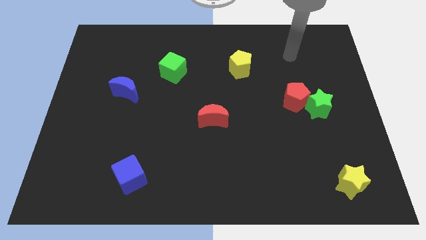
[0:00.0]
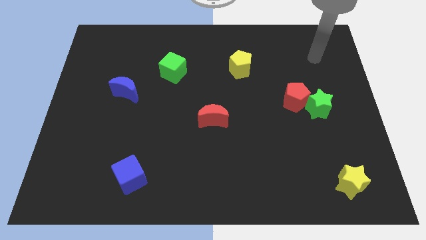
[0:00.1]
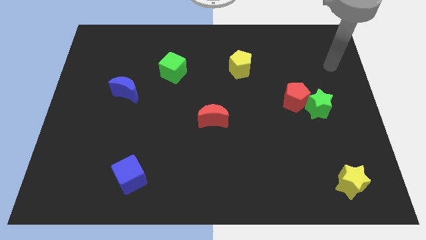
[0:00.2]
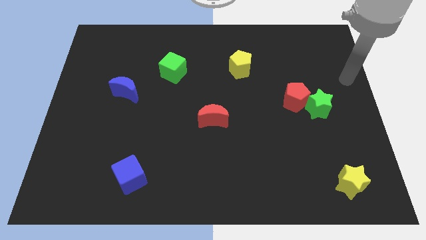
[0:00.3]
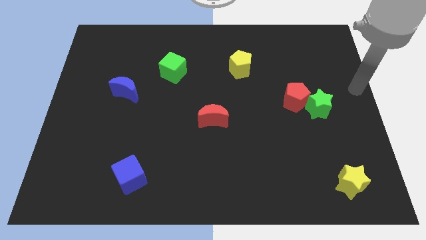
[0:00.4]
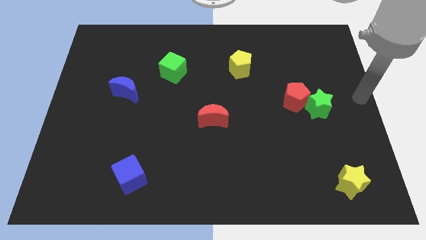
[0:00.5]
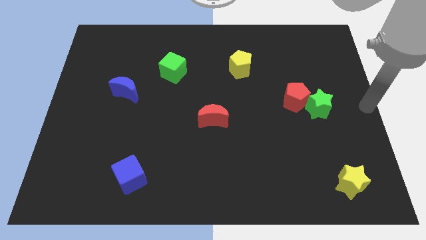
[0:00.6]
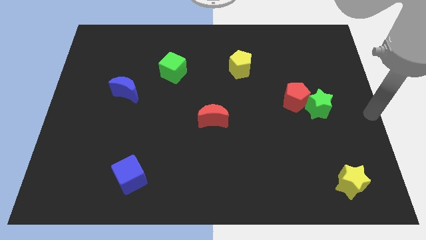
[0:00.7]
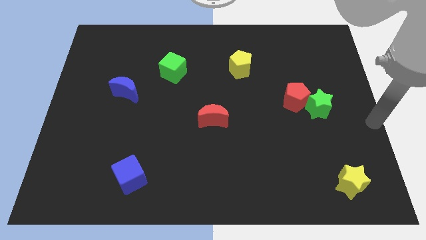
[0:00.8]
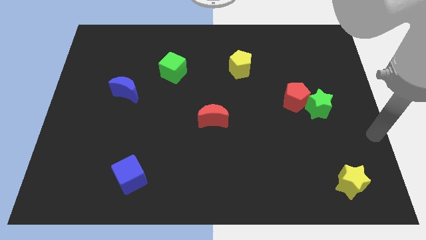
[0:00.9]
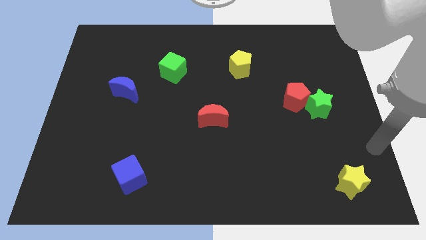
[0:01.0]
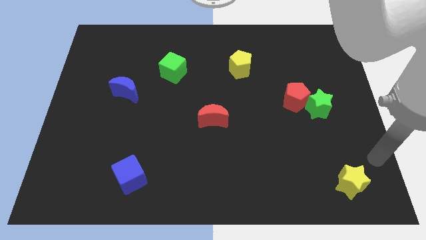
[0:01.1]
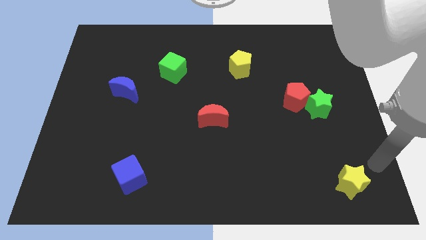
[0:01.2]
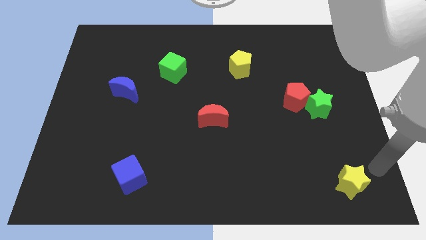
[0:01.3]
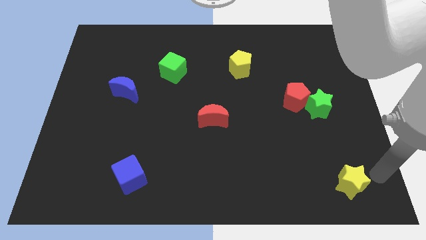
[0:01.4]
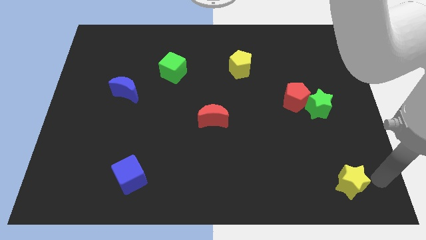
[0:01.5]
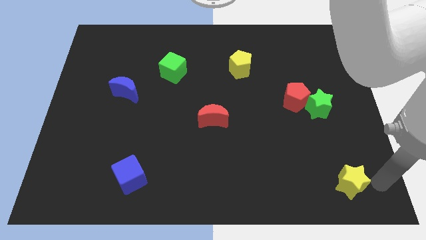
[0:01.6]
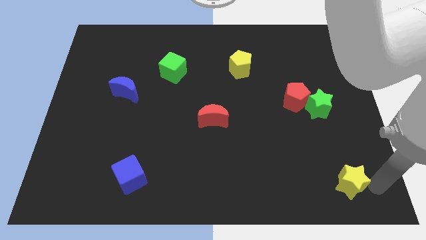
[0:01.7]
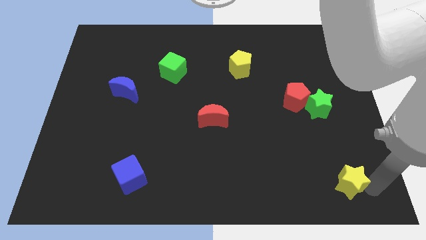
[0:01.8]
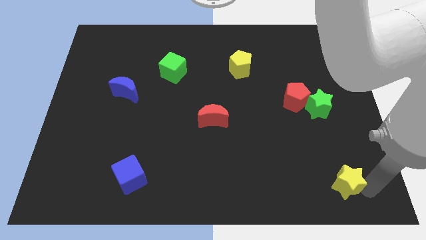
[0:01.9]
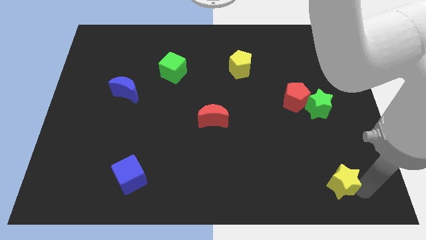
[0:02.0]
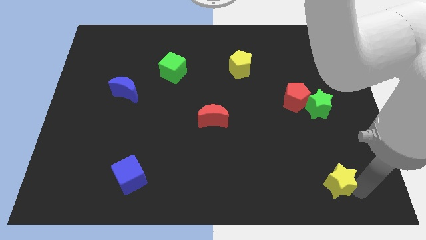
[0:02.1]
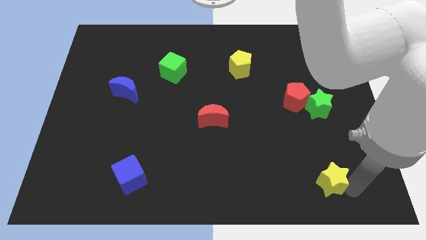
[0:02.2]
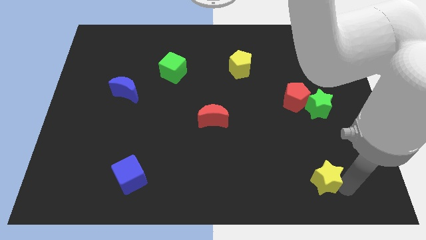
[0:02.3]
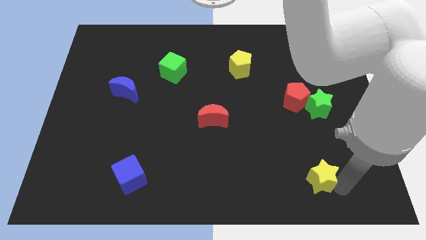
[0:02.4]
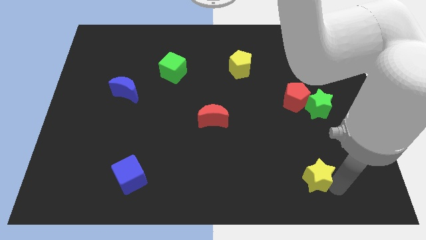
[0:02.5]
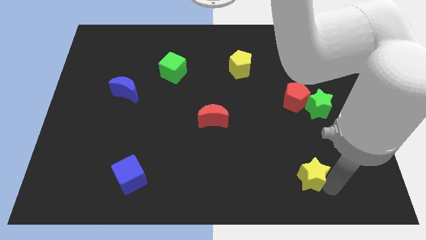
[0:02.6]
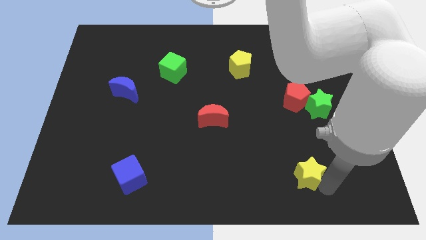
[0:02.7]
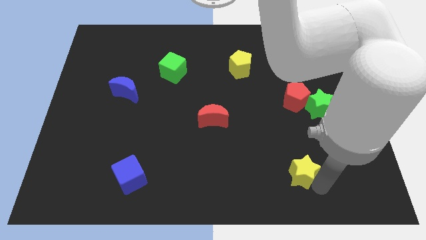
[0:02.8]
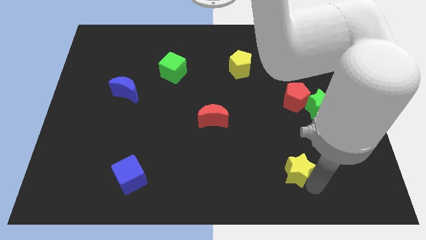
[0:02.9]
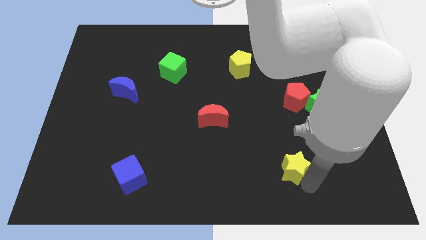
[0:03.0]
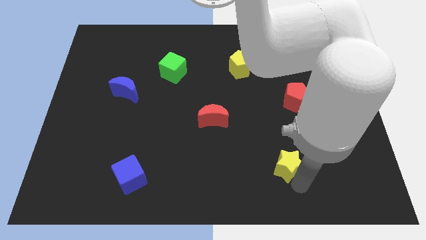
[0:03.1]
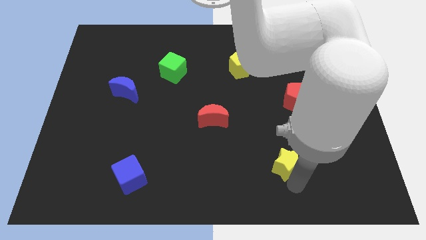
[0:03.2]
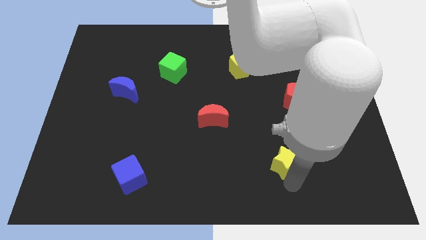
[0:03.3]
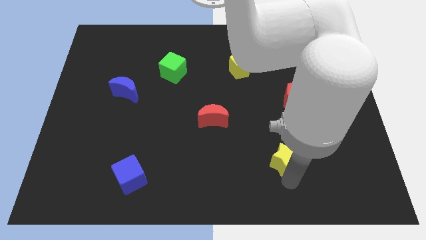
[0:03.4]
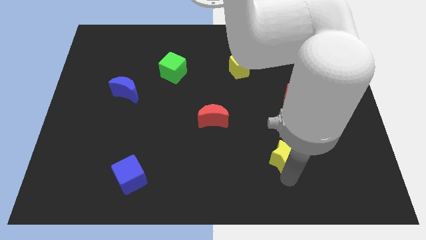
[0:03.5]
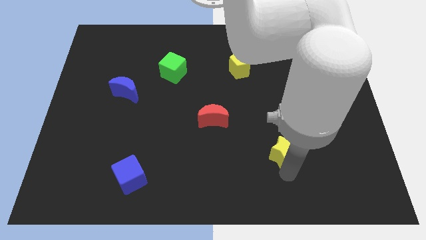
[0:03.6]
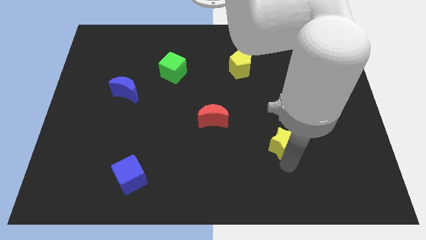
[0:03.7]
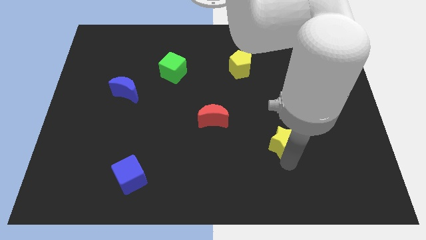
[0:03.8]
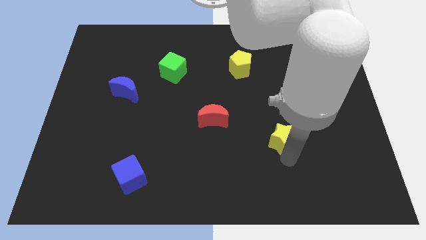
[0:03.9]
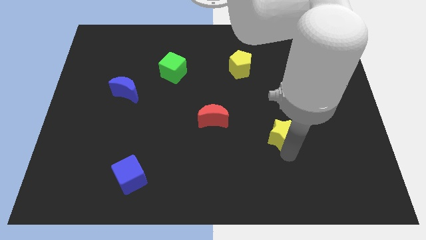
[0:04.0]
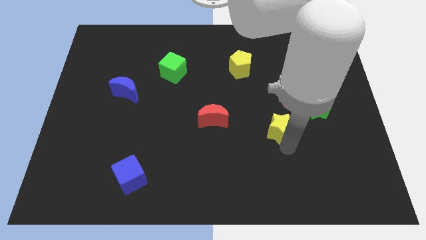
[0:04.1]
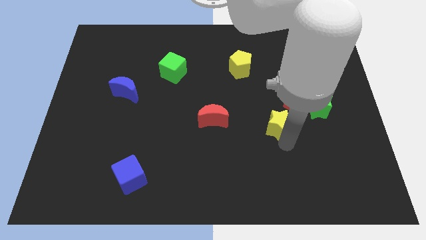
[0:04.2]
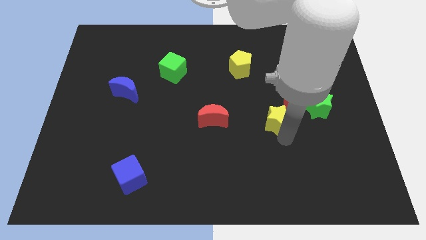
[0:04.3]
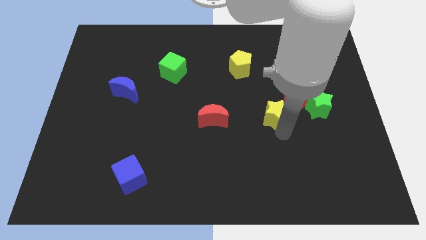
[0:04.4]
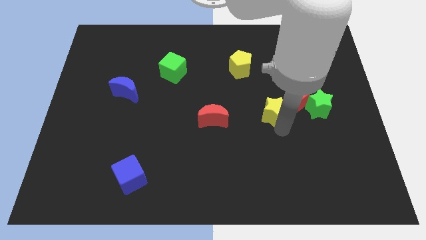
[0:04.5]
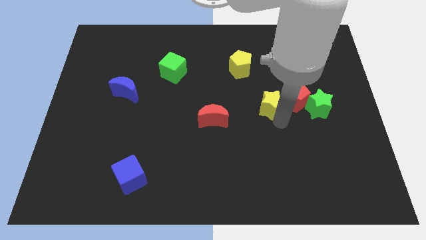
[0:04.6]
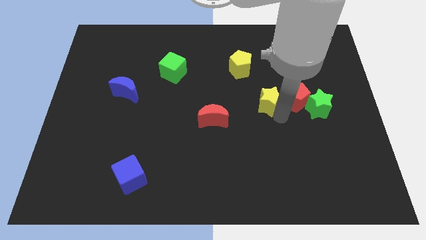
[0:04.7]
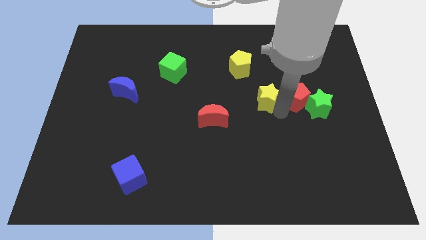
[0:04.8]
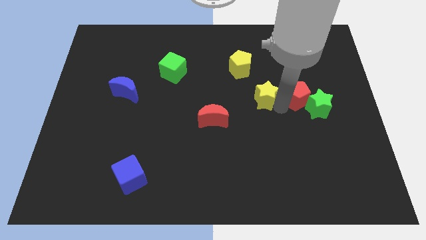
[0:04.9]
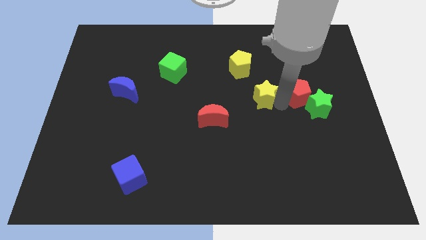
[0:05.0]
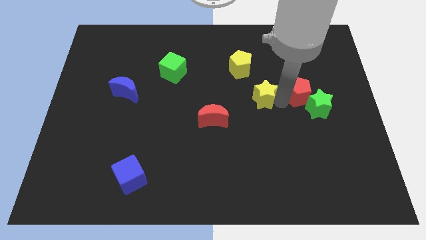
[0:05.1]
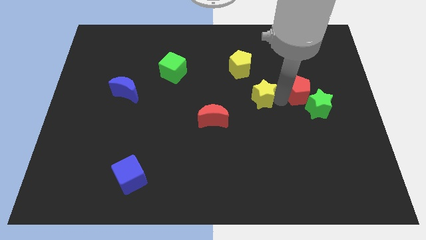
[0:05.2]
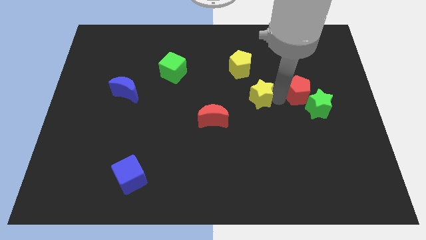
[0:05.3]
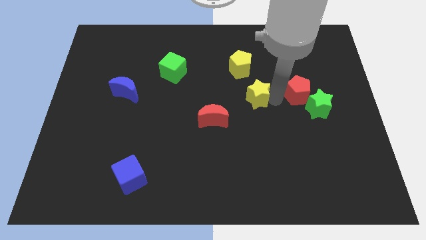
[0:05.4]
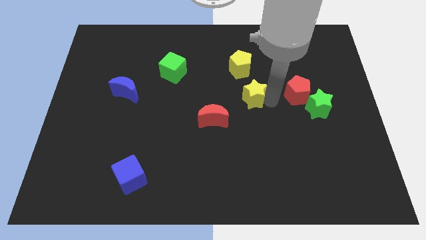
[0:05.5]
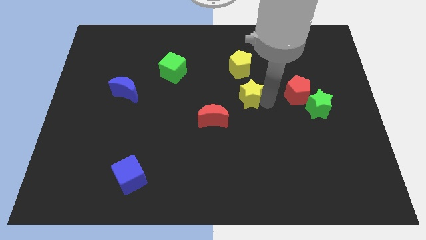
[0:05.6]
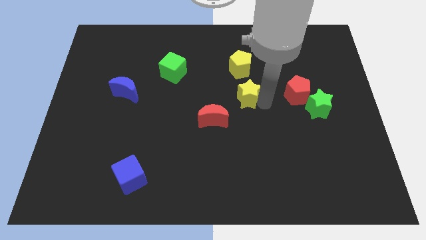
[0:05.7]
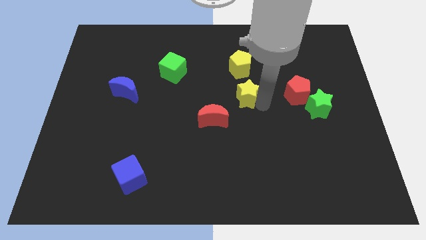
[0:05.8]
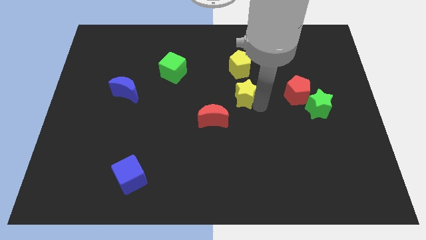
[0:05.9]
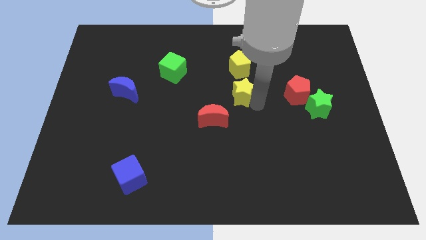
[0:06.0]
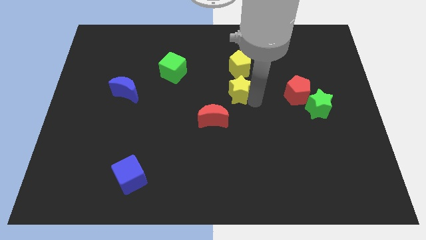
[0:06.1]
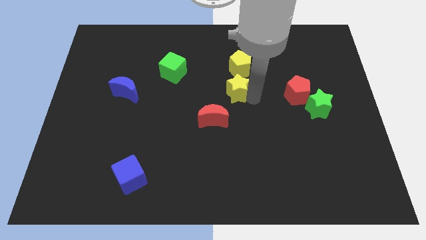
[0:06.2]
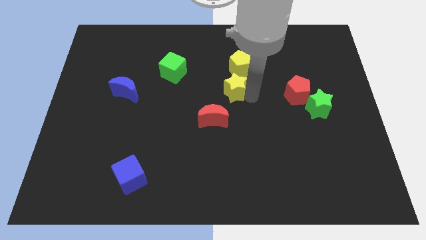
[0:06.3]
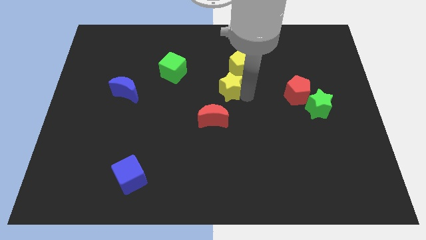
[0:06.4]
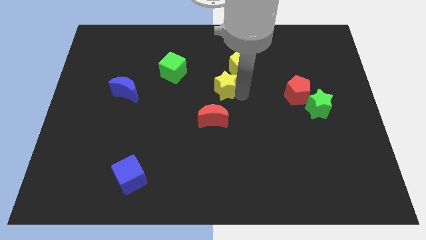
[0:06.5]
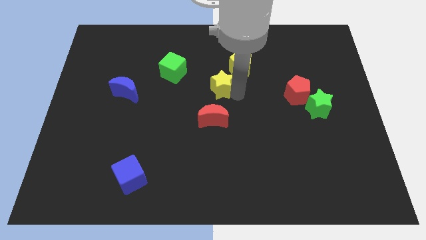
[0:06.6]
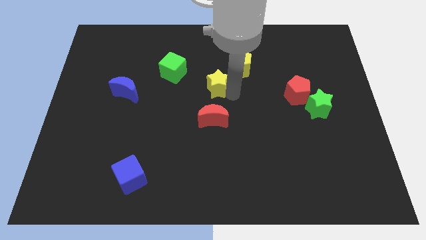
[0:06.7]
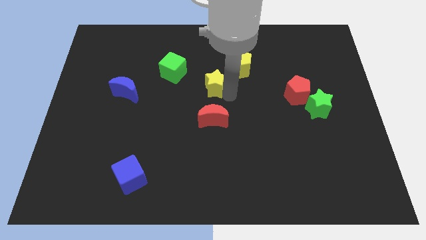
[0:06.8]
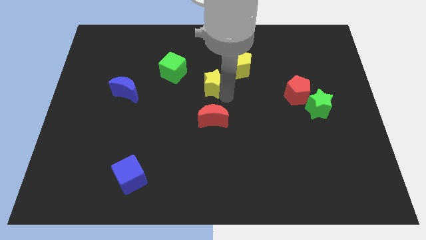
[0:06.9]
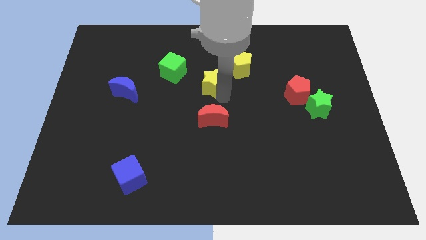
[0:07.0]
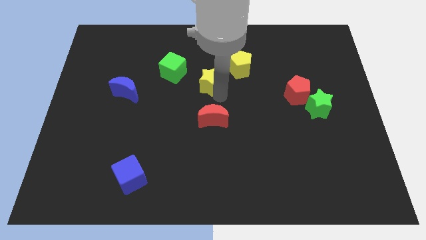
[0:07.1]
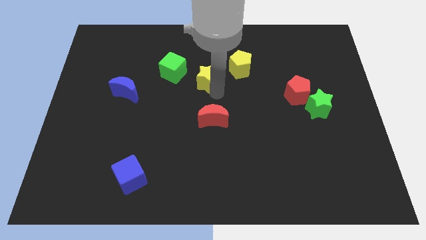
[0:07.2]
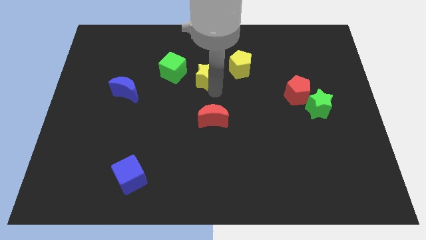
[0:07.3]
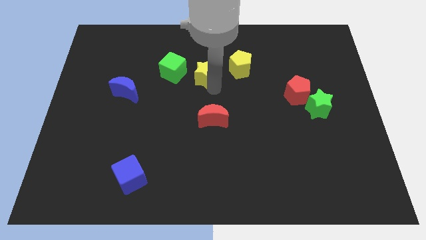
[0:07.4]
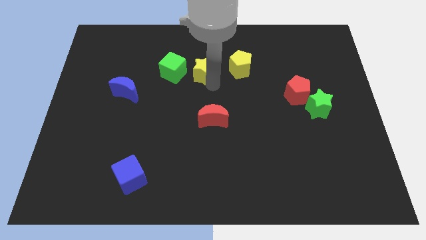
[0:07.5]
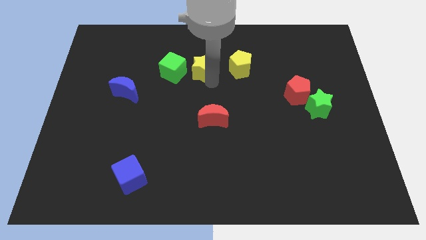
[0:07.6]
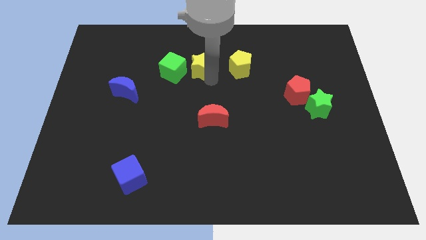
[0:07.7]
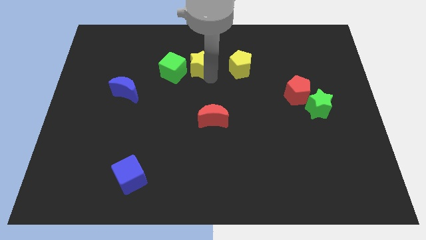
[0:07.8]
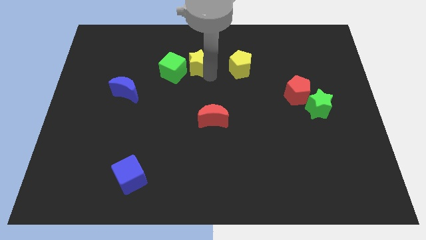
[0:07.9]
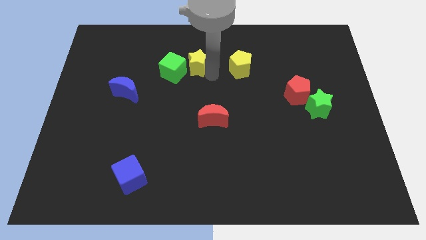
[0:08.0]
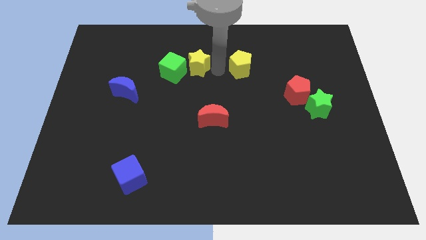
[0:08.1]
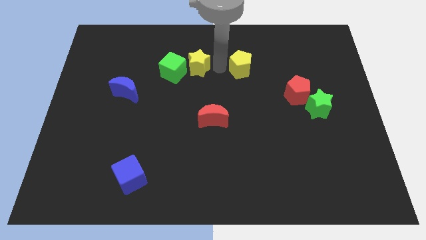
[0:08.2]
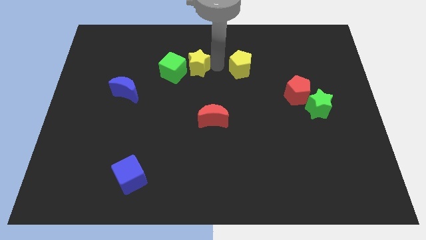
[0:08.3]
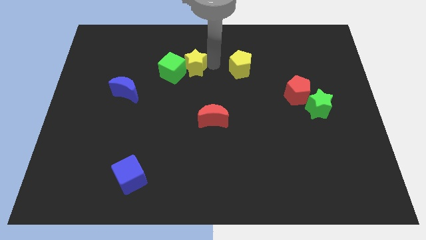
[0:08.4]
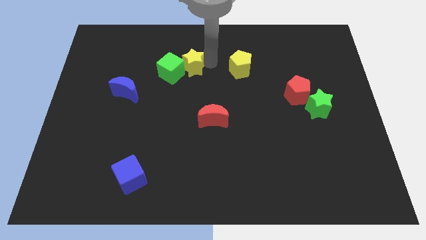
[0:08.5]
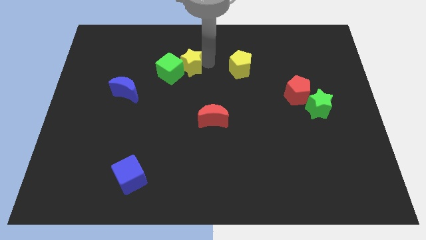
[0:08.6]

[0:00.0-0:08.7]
move the yellow star to the green cube
